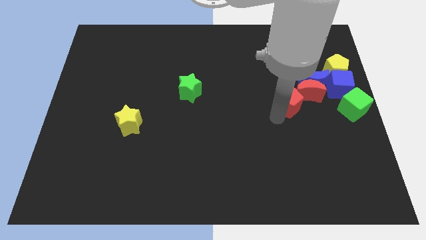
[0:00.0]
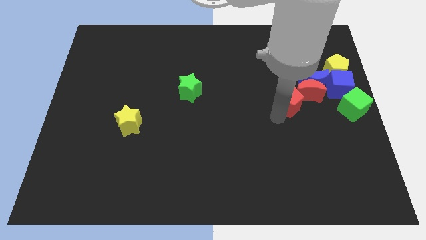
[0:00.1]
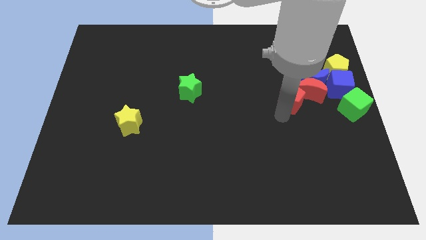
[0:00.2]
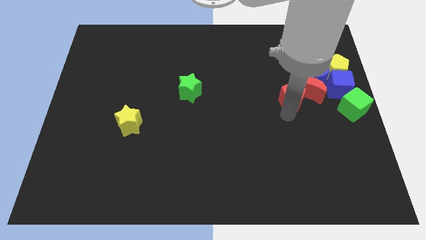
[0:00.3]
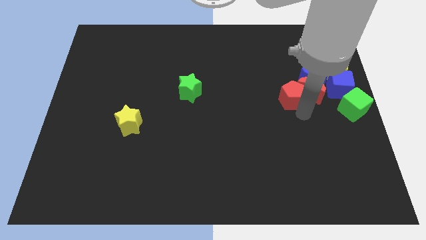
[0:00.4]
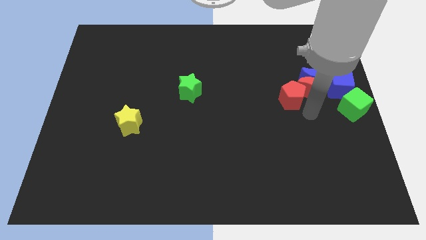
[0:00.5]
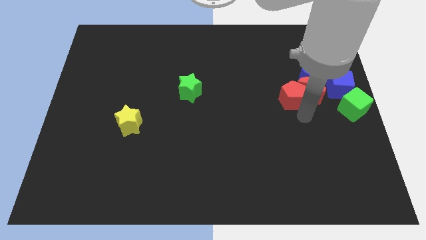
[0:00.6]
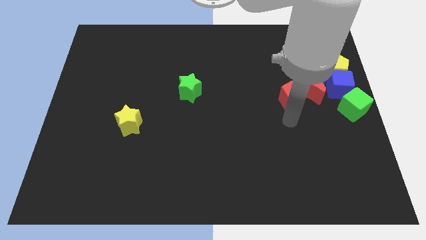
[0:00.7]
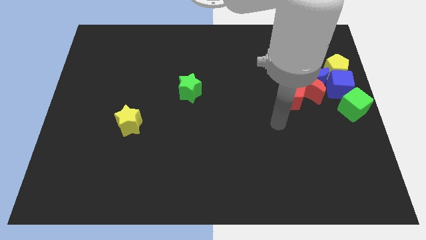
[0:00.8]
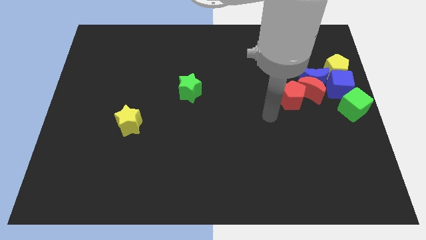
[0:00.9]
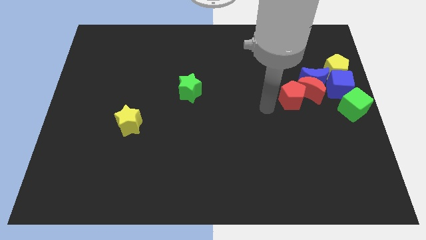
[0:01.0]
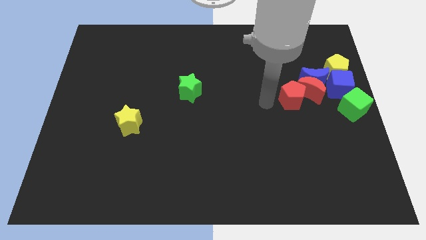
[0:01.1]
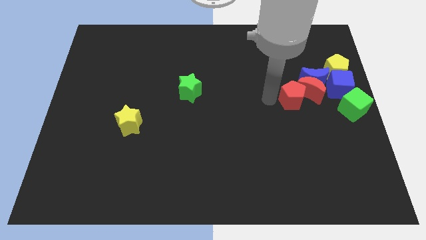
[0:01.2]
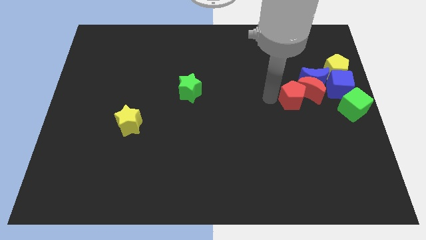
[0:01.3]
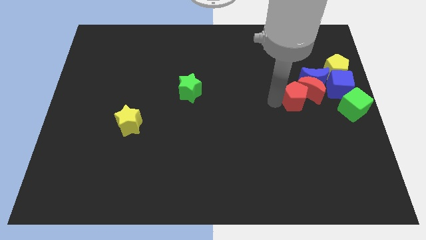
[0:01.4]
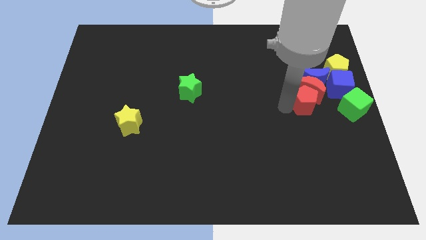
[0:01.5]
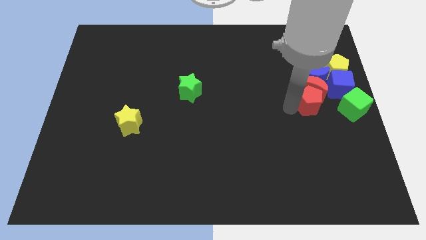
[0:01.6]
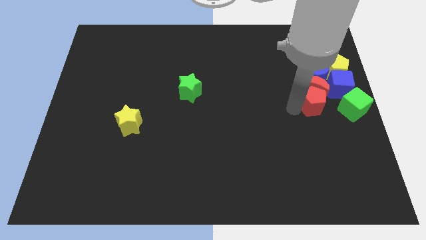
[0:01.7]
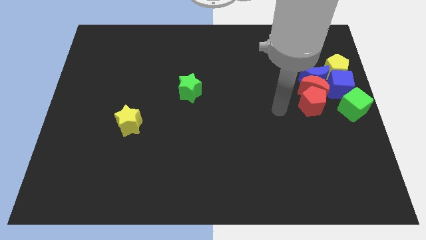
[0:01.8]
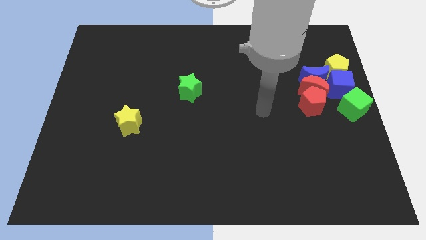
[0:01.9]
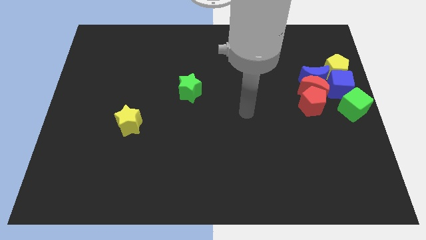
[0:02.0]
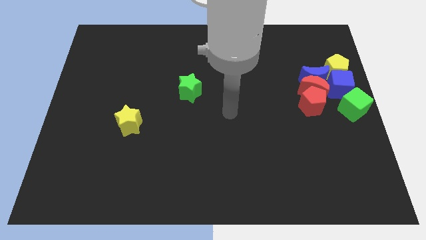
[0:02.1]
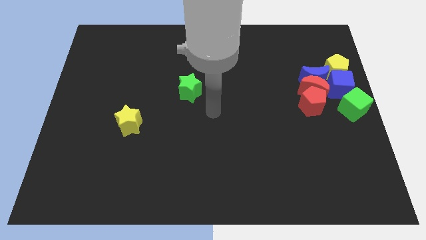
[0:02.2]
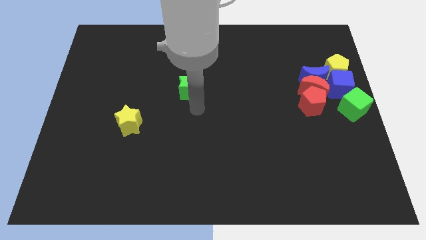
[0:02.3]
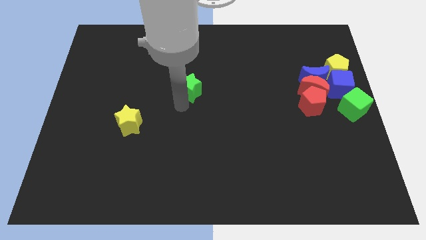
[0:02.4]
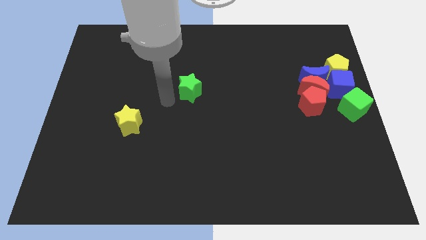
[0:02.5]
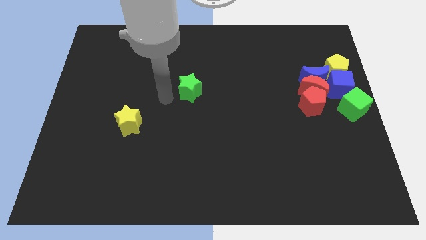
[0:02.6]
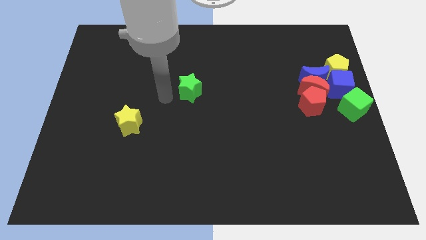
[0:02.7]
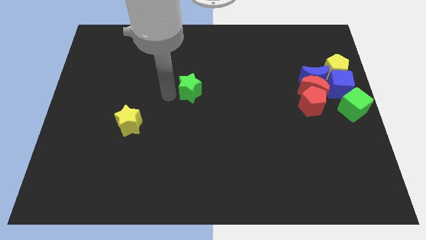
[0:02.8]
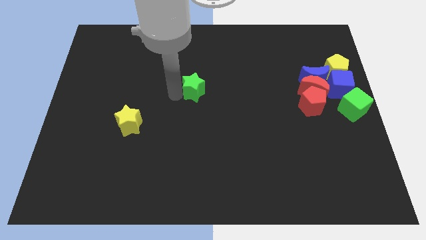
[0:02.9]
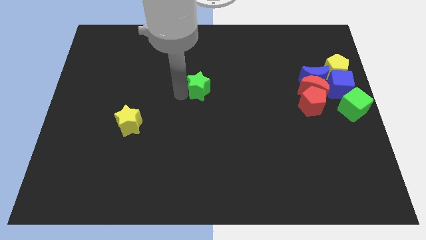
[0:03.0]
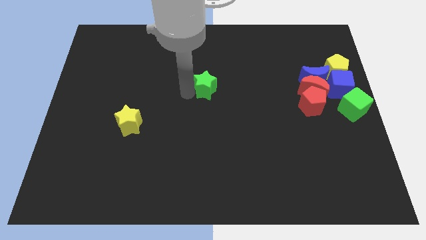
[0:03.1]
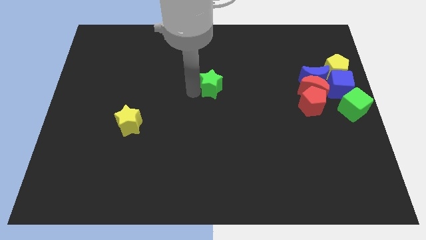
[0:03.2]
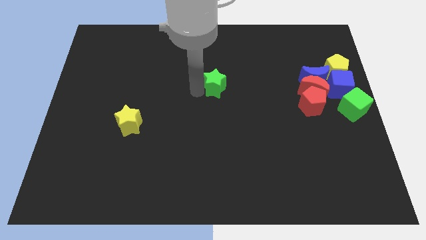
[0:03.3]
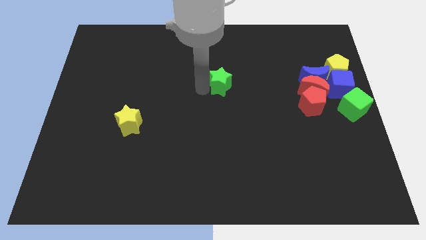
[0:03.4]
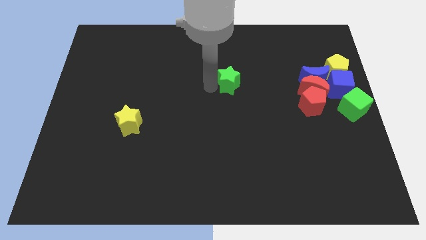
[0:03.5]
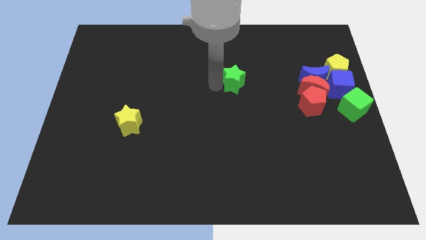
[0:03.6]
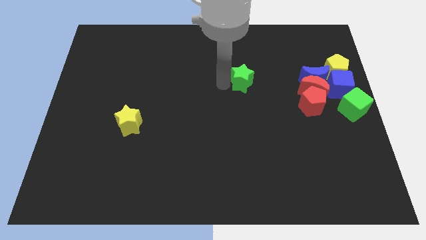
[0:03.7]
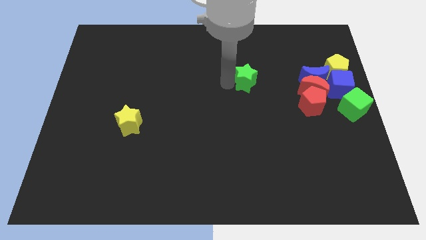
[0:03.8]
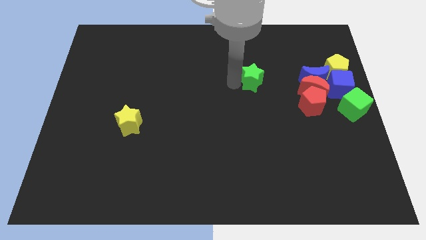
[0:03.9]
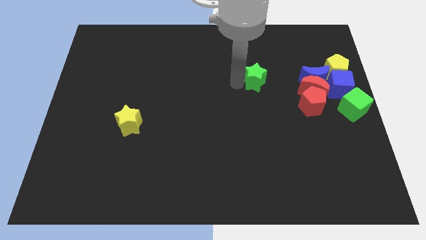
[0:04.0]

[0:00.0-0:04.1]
move green star towards right side

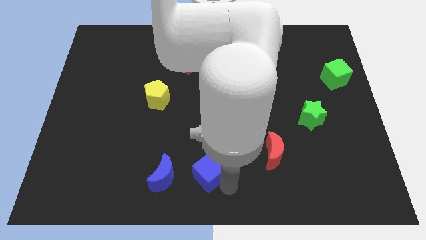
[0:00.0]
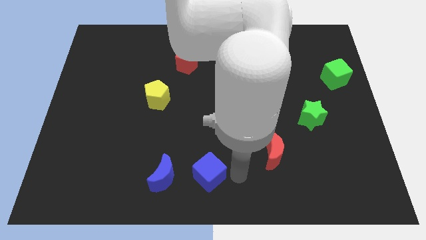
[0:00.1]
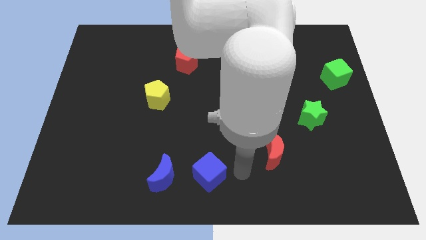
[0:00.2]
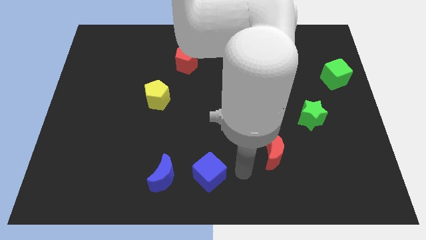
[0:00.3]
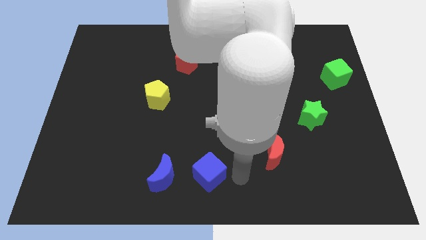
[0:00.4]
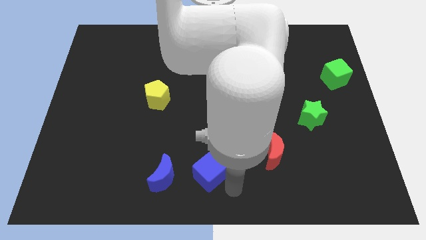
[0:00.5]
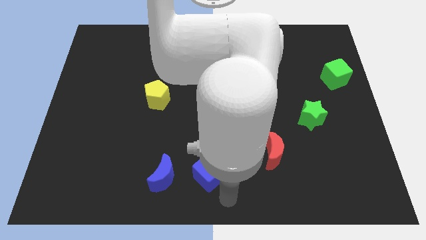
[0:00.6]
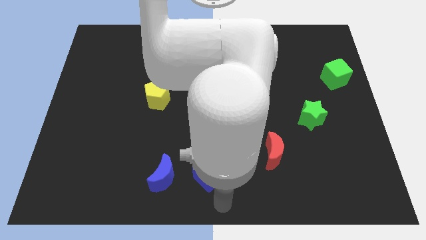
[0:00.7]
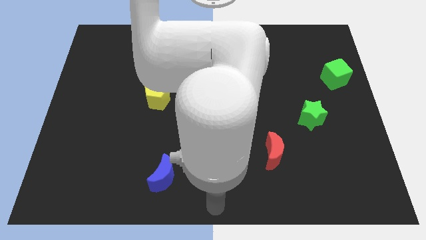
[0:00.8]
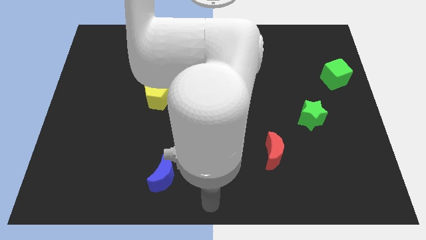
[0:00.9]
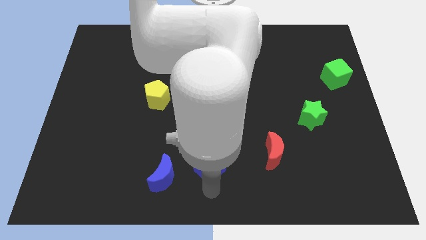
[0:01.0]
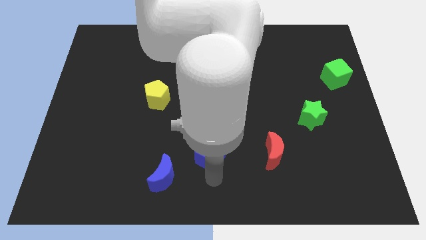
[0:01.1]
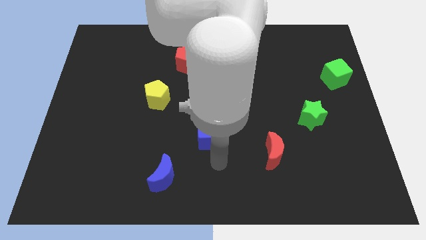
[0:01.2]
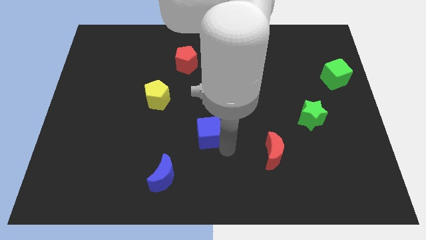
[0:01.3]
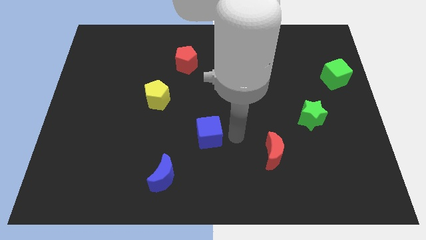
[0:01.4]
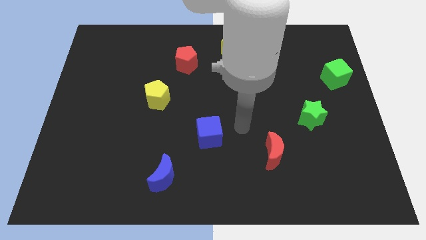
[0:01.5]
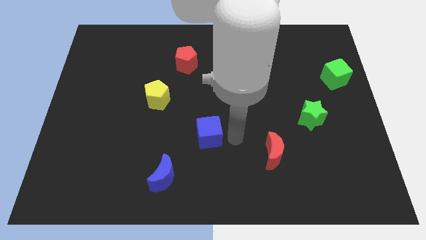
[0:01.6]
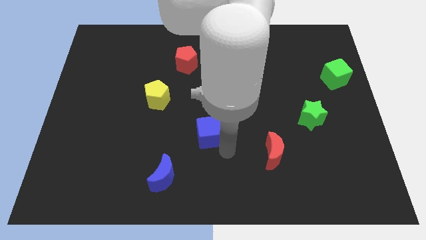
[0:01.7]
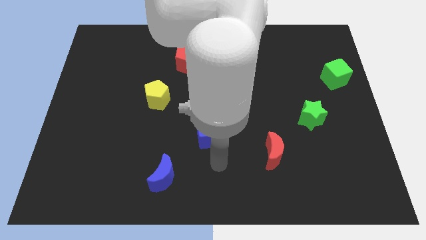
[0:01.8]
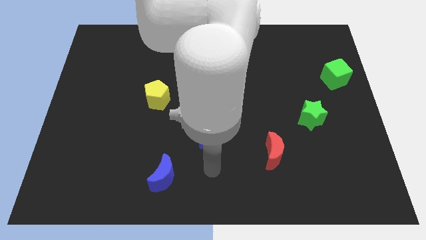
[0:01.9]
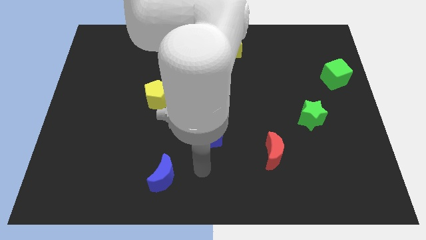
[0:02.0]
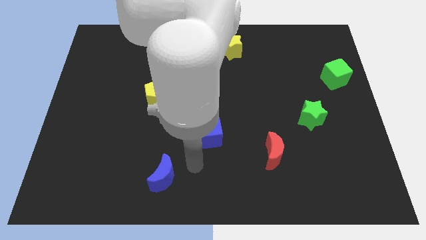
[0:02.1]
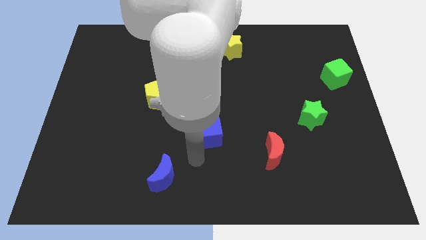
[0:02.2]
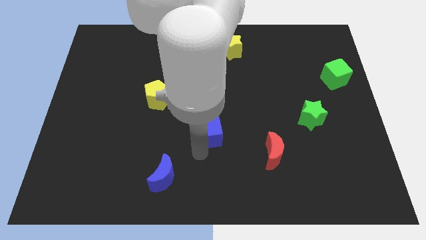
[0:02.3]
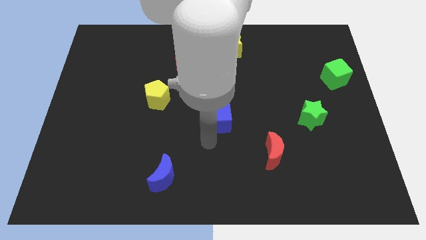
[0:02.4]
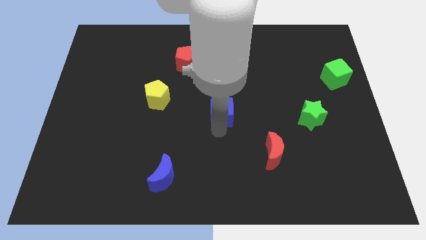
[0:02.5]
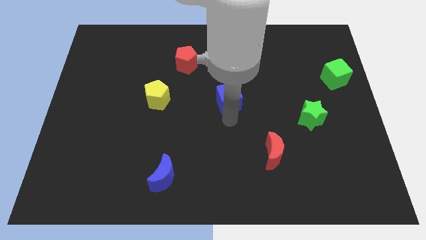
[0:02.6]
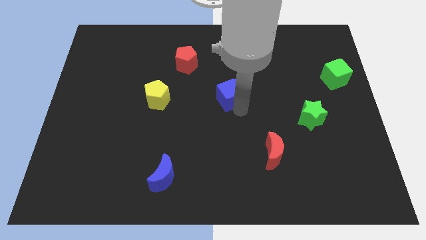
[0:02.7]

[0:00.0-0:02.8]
place the blue cube at the center of the board

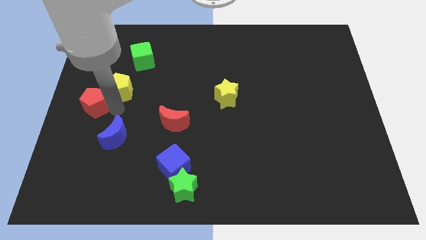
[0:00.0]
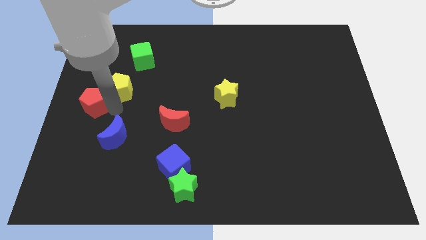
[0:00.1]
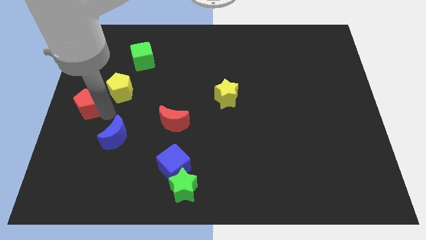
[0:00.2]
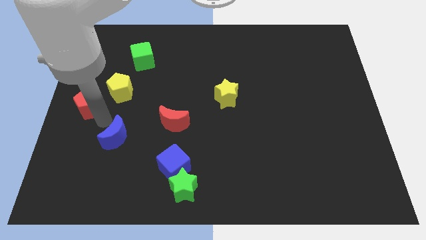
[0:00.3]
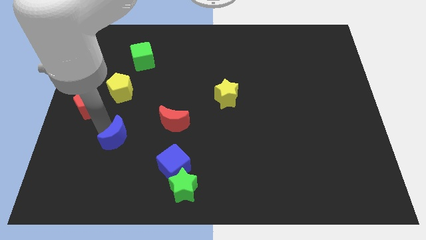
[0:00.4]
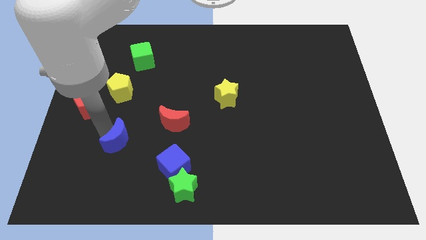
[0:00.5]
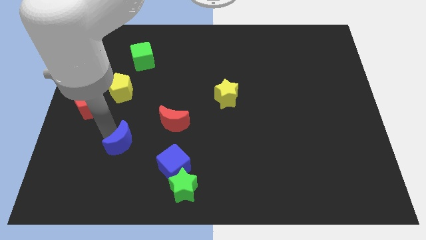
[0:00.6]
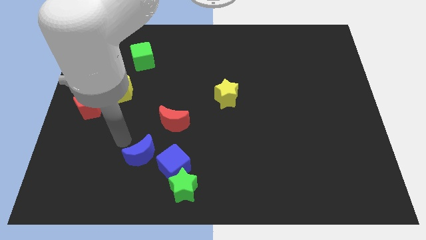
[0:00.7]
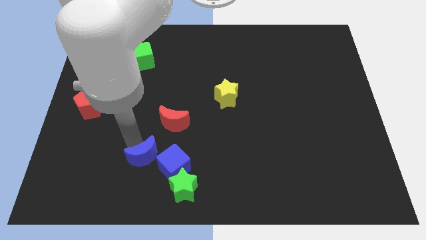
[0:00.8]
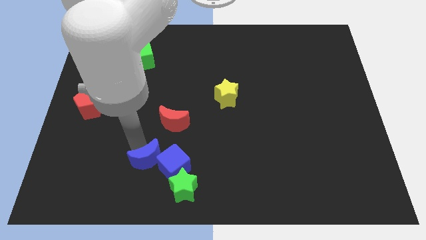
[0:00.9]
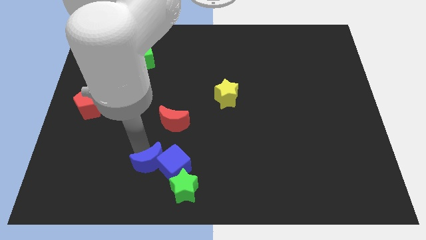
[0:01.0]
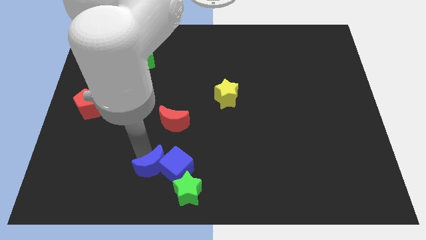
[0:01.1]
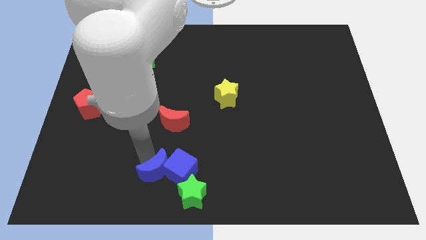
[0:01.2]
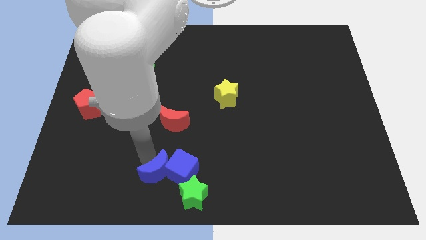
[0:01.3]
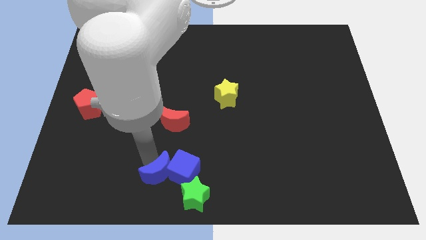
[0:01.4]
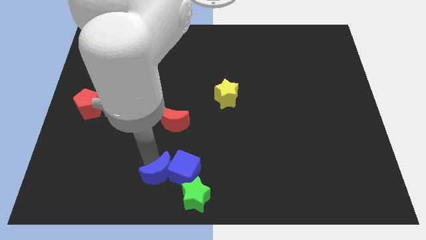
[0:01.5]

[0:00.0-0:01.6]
push the blue moon into blue cube

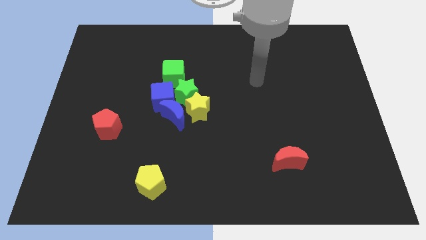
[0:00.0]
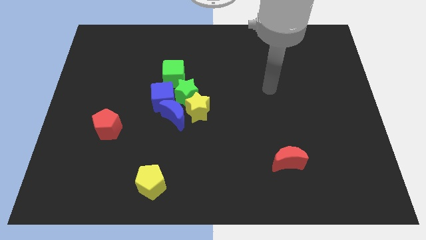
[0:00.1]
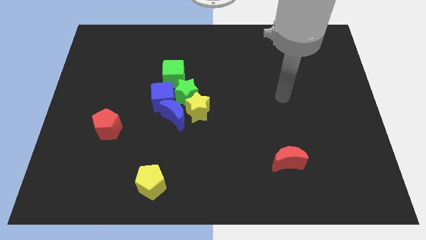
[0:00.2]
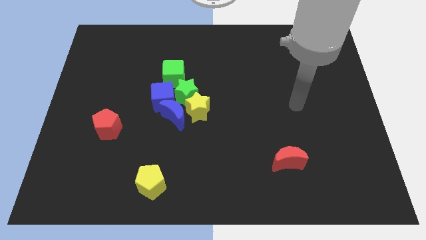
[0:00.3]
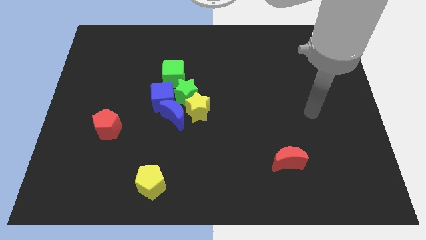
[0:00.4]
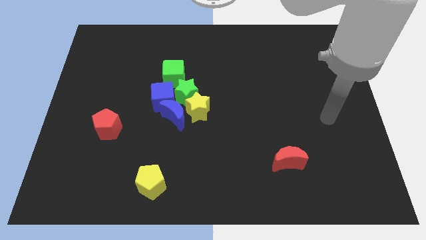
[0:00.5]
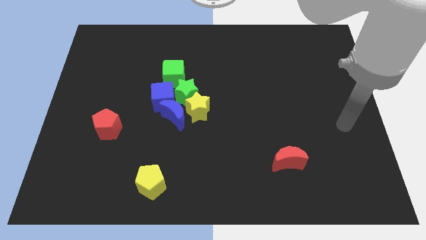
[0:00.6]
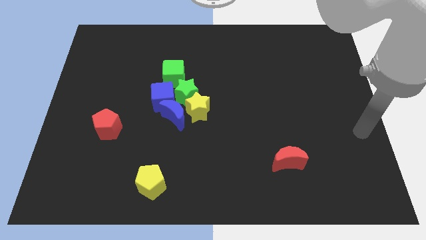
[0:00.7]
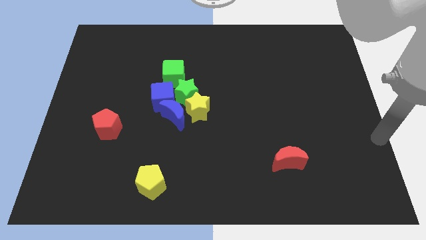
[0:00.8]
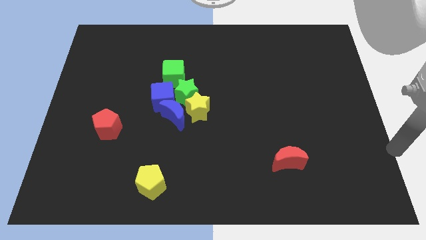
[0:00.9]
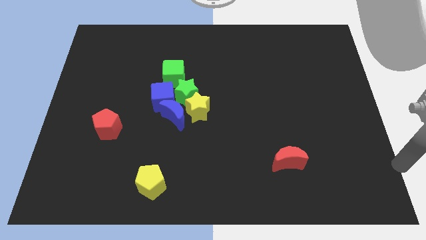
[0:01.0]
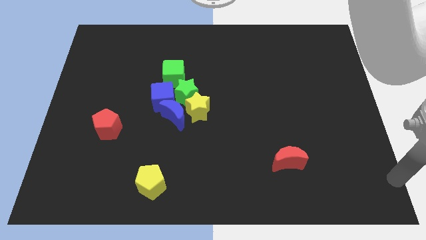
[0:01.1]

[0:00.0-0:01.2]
move your arm to the bottom right of the board
